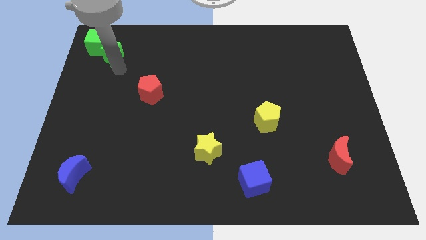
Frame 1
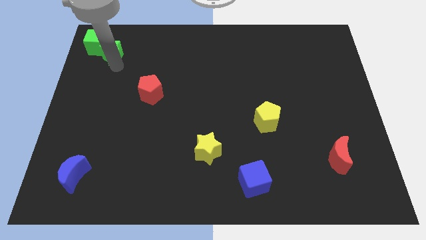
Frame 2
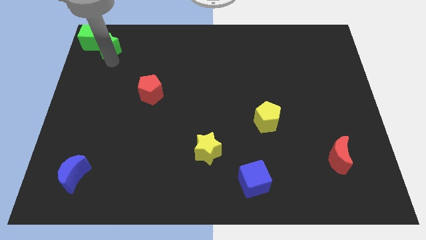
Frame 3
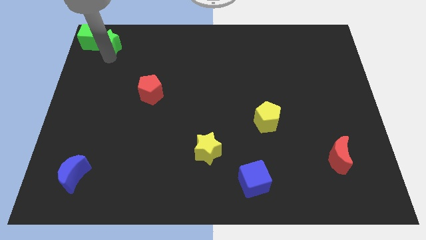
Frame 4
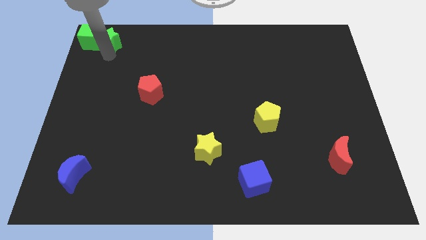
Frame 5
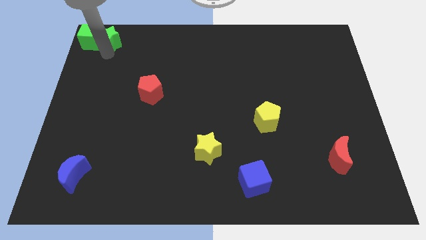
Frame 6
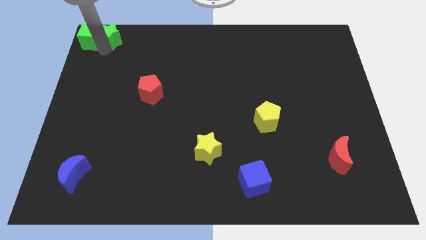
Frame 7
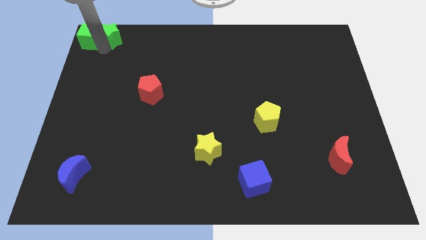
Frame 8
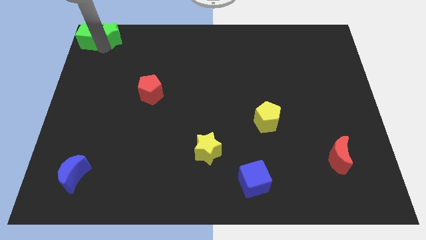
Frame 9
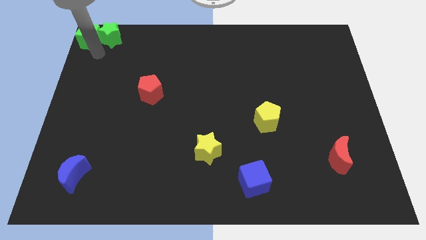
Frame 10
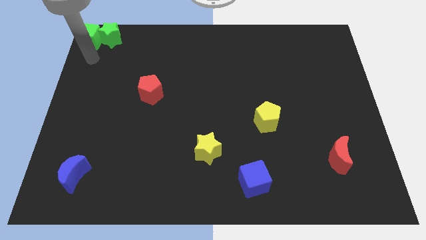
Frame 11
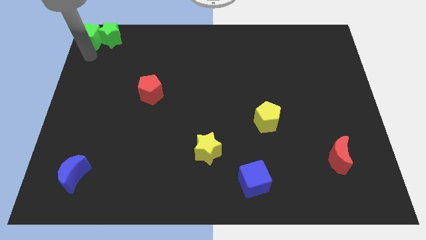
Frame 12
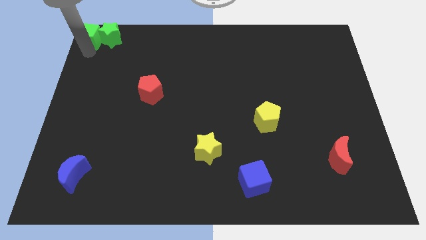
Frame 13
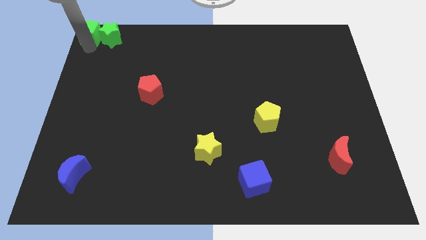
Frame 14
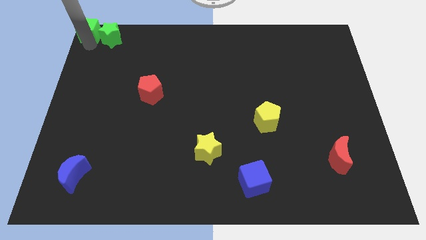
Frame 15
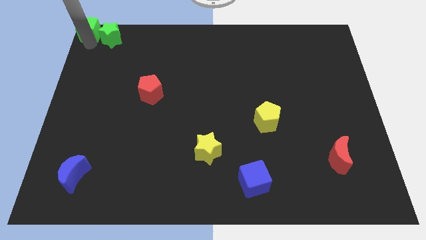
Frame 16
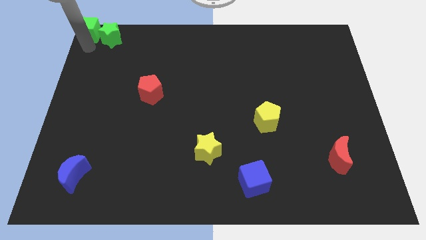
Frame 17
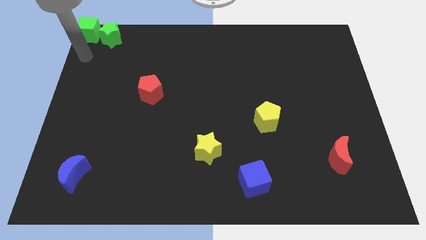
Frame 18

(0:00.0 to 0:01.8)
place green cube towards left top corner

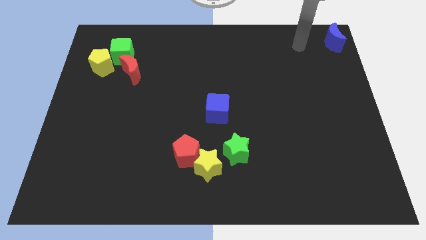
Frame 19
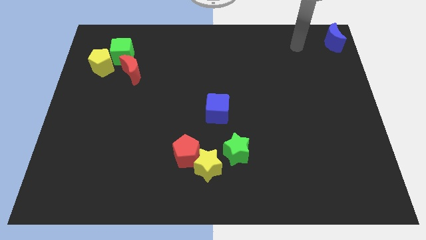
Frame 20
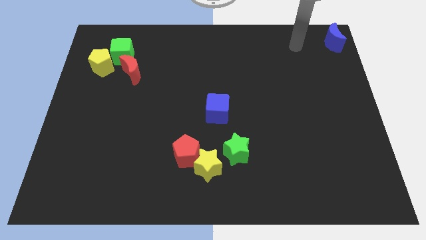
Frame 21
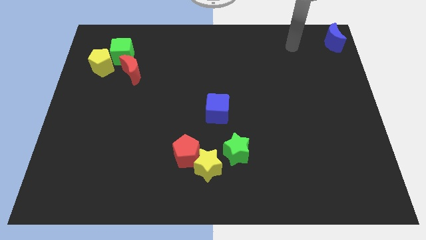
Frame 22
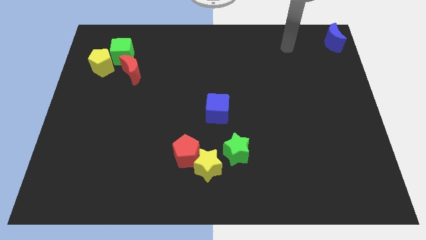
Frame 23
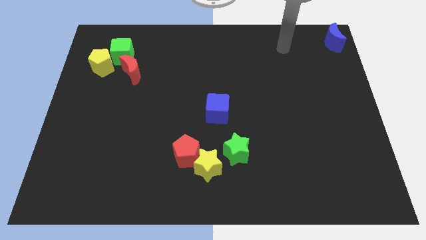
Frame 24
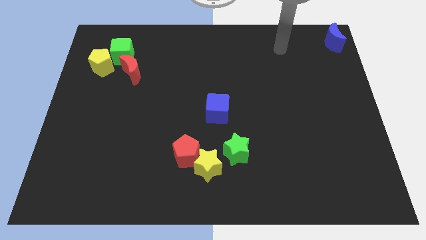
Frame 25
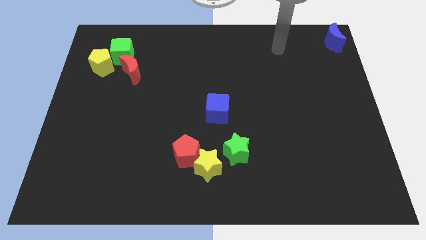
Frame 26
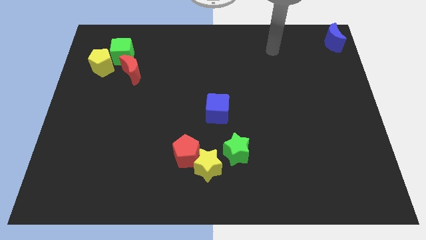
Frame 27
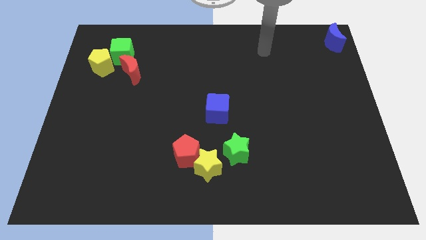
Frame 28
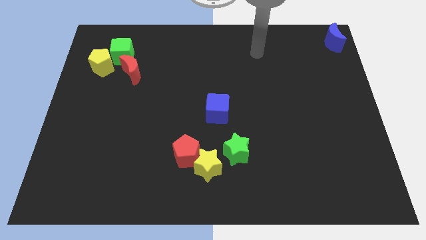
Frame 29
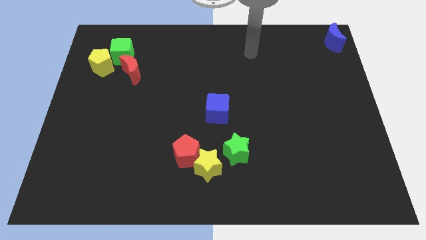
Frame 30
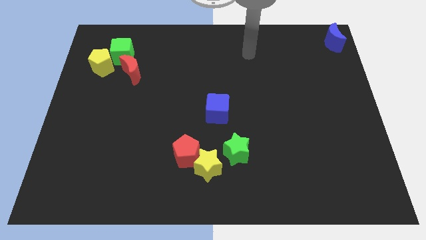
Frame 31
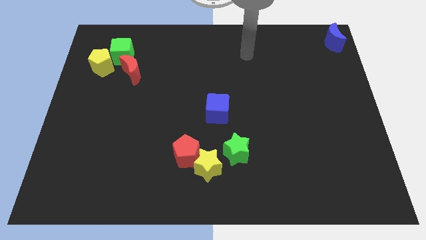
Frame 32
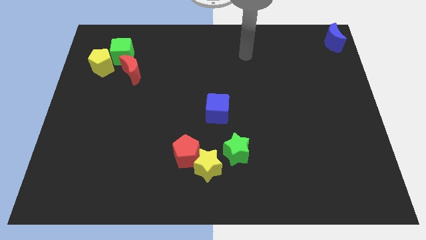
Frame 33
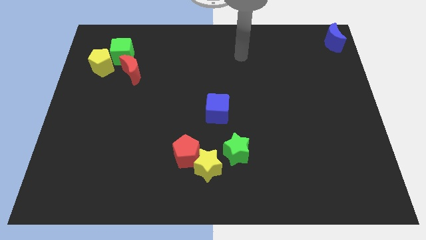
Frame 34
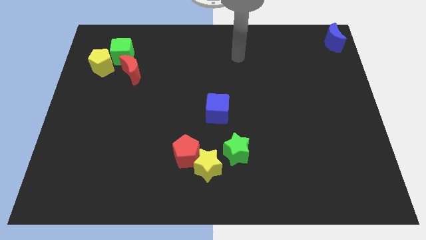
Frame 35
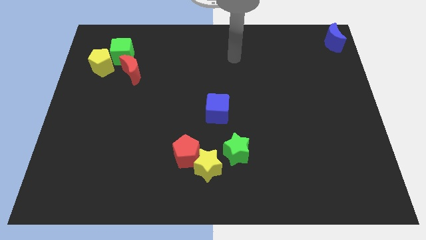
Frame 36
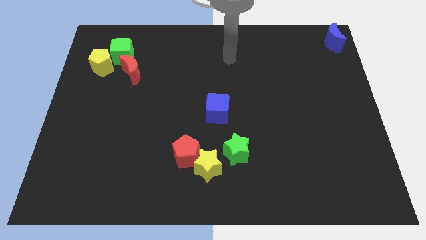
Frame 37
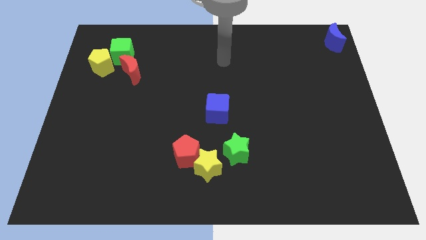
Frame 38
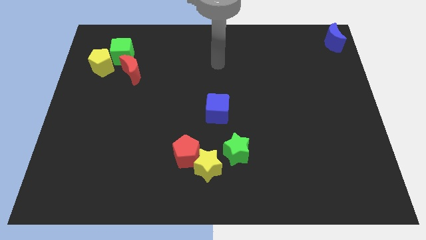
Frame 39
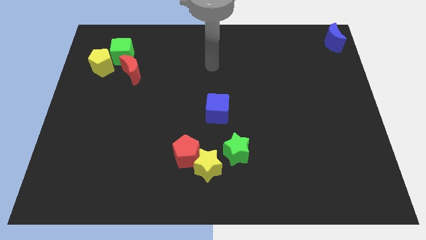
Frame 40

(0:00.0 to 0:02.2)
place your hand vertically above the blue cube

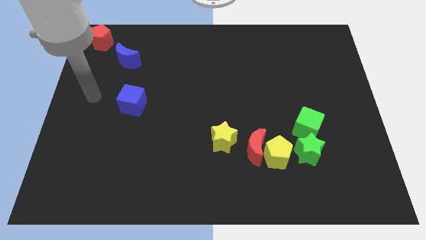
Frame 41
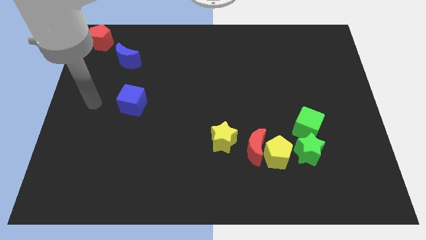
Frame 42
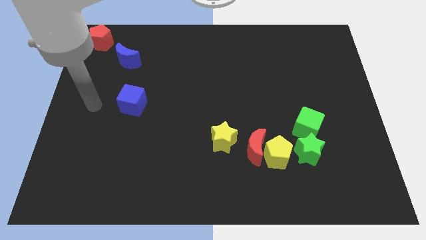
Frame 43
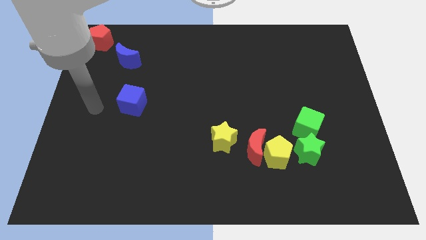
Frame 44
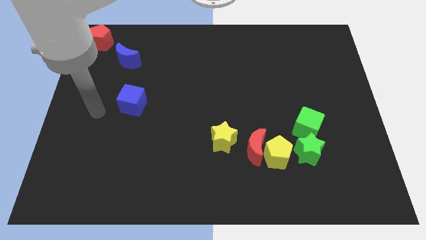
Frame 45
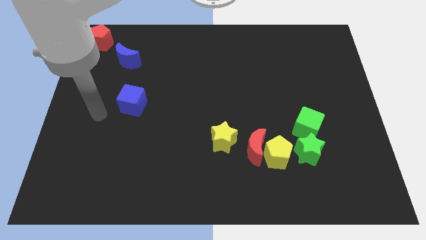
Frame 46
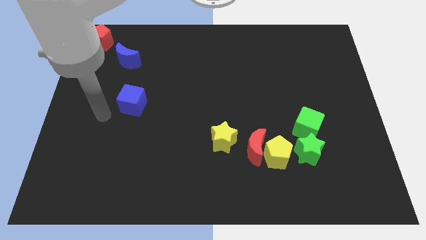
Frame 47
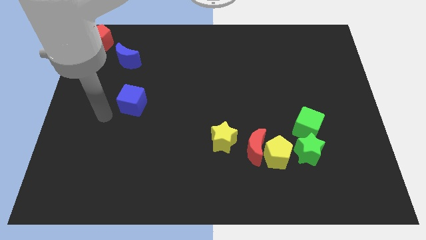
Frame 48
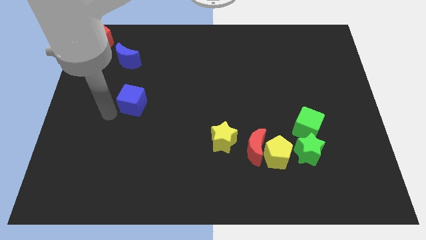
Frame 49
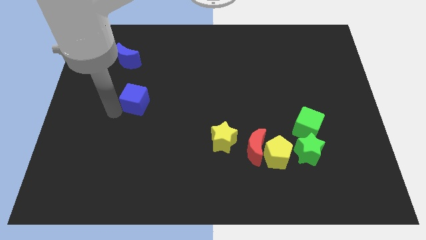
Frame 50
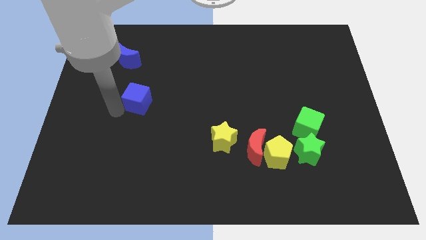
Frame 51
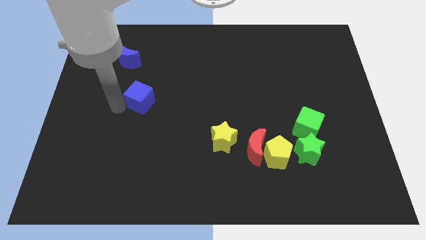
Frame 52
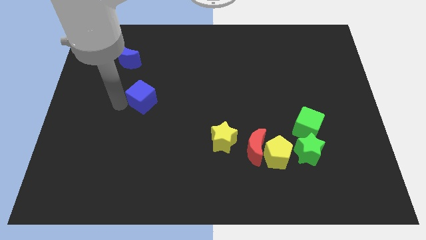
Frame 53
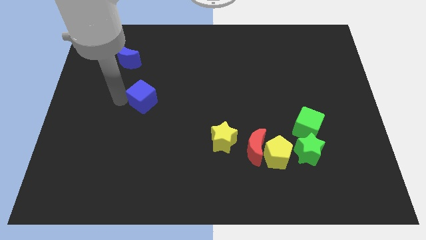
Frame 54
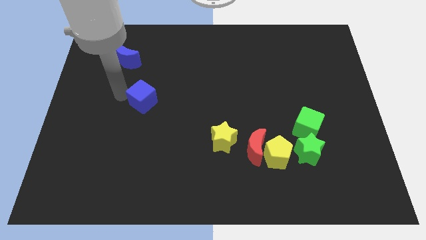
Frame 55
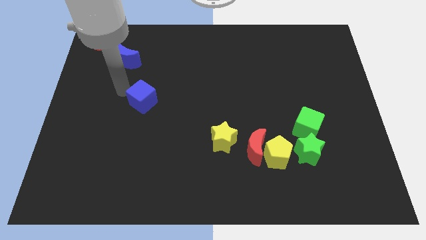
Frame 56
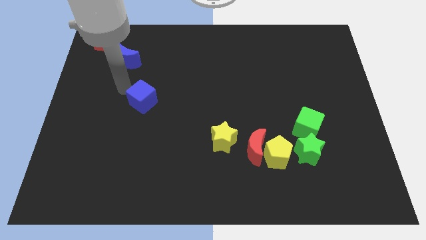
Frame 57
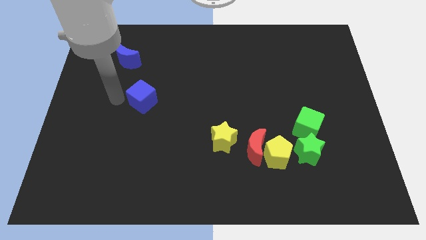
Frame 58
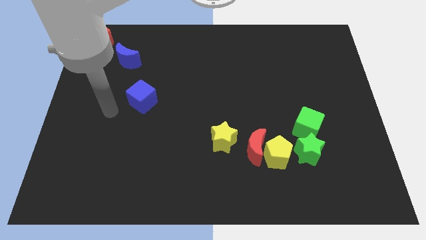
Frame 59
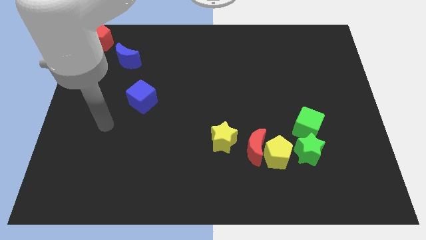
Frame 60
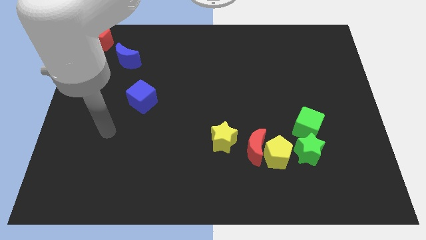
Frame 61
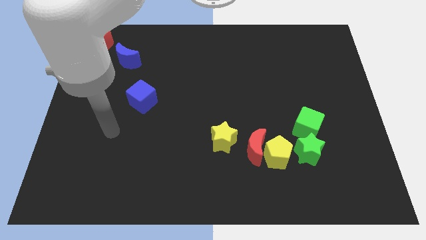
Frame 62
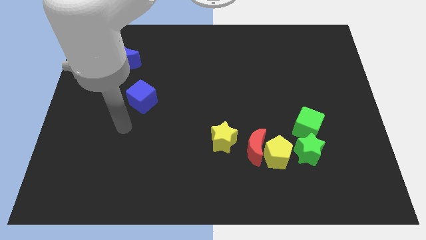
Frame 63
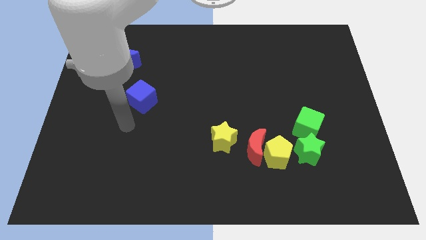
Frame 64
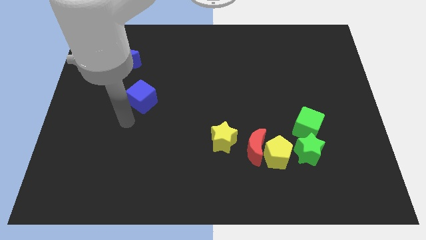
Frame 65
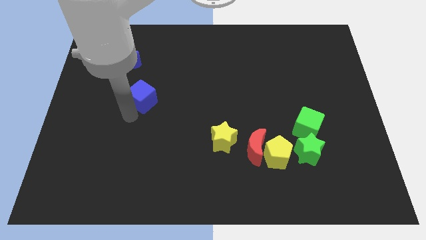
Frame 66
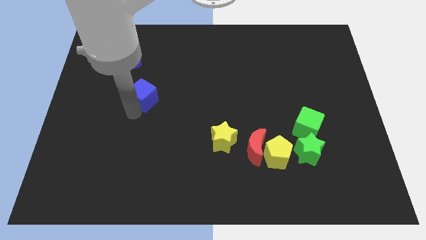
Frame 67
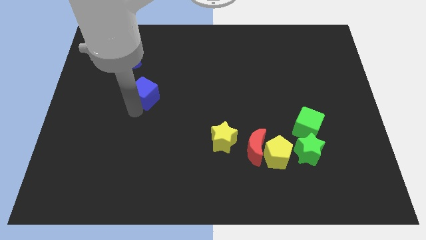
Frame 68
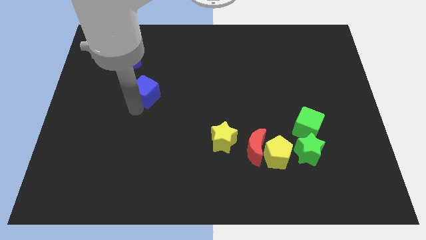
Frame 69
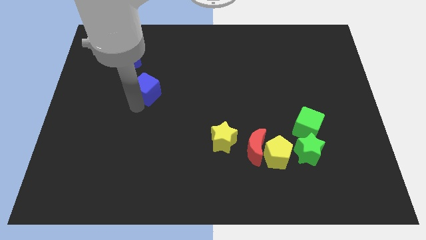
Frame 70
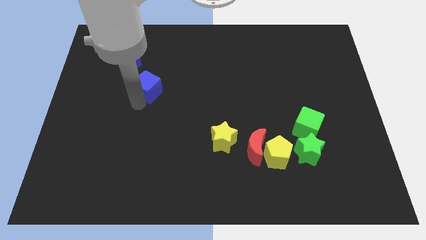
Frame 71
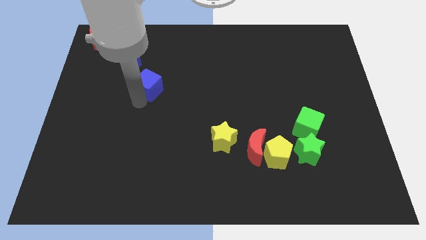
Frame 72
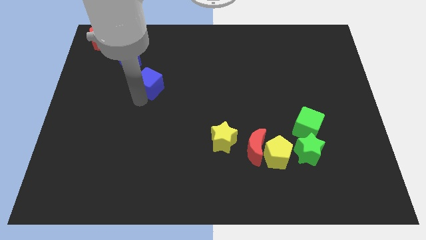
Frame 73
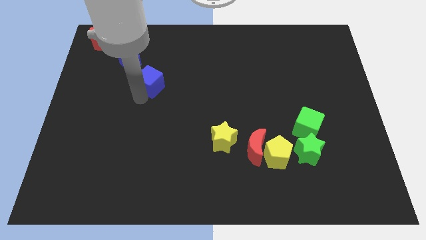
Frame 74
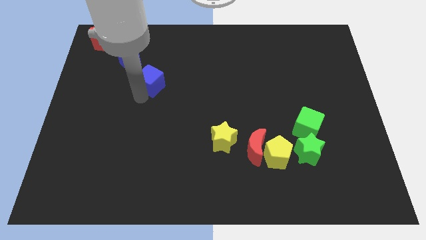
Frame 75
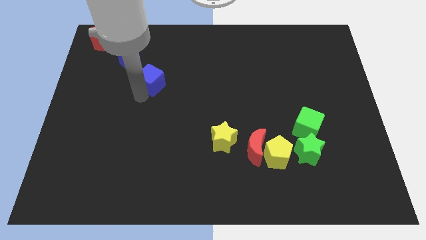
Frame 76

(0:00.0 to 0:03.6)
push the blue cube to the bottom right side of the blue moon

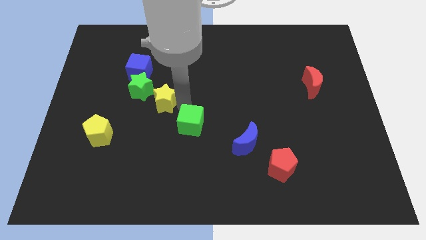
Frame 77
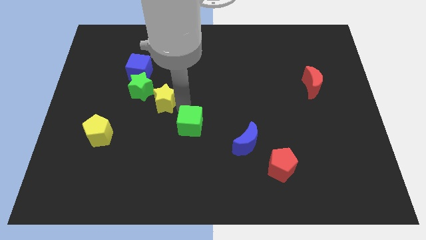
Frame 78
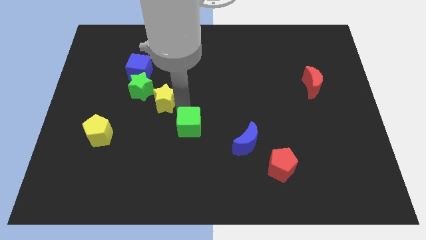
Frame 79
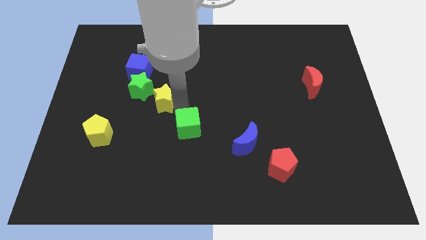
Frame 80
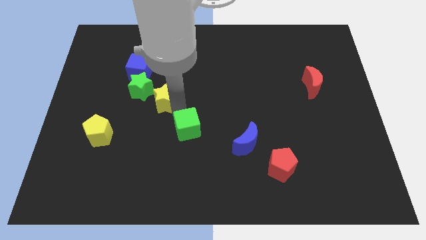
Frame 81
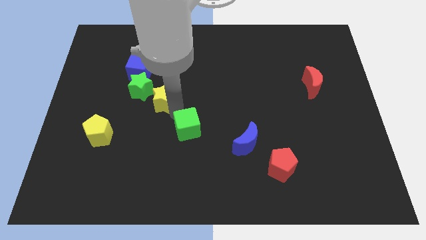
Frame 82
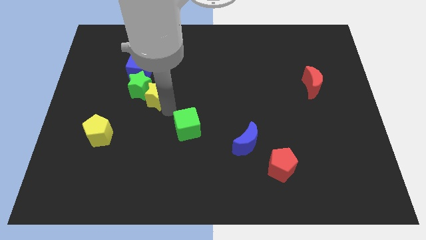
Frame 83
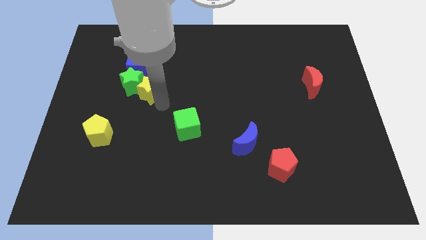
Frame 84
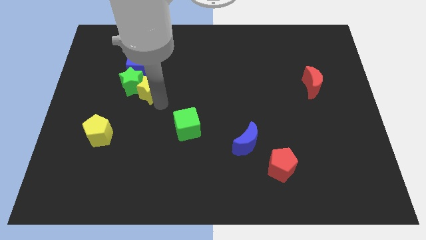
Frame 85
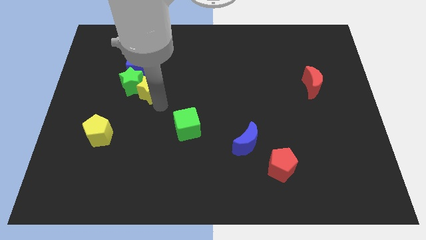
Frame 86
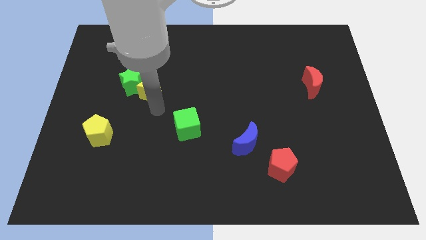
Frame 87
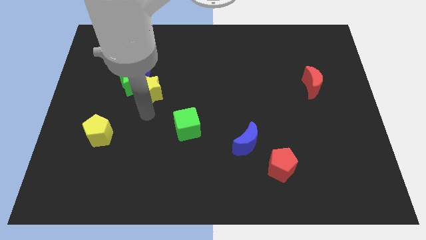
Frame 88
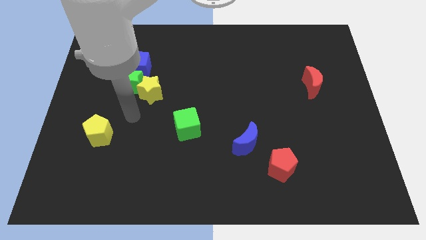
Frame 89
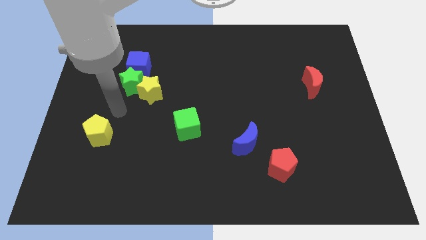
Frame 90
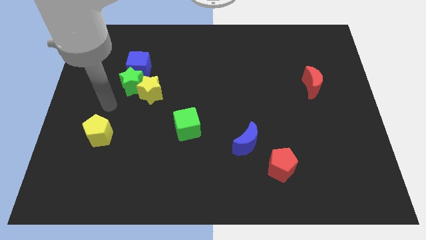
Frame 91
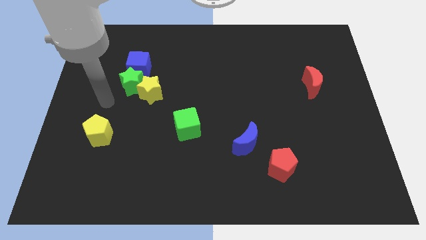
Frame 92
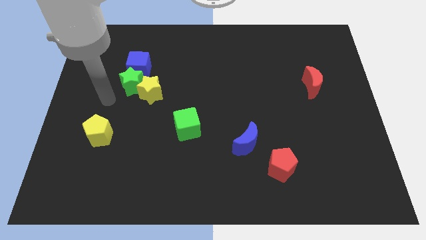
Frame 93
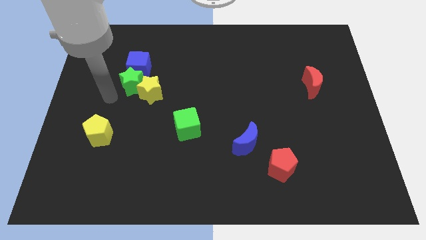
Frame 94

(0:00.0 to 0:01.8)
push the yellow and green star together below the blue cube
